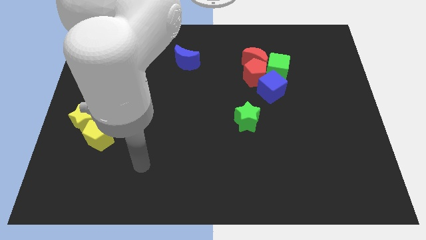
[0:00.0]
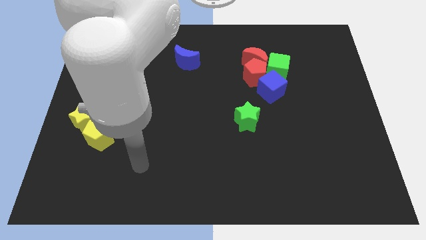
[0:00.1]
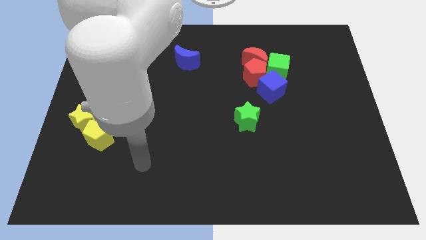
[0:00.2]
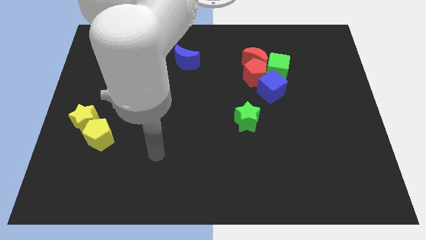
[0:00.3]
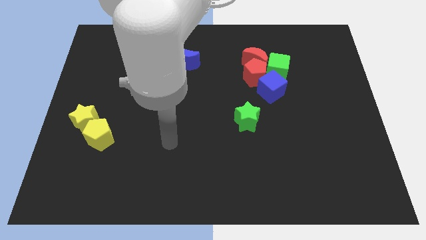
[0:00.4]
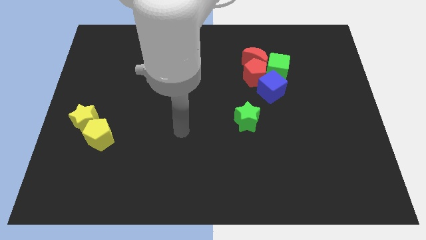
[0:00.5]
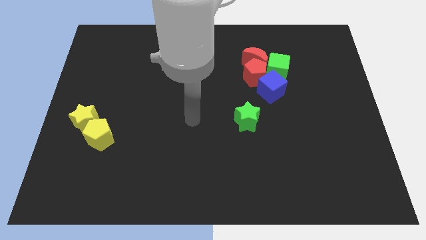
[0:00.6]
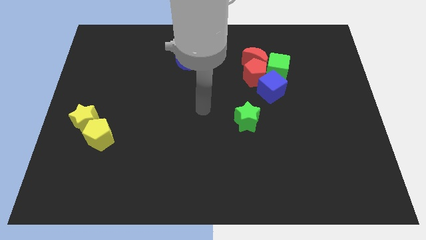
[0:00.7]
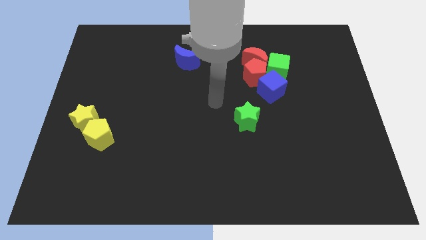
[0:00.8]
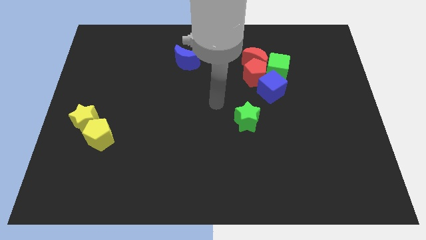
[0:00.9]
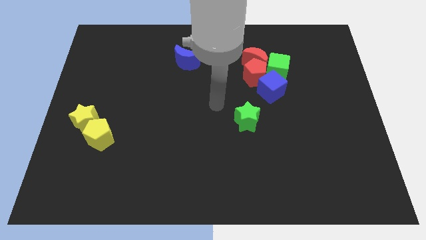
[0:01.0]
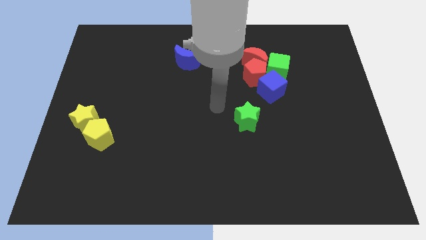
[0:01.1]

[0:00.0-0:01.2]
point your arm at the center of the board

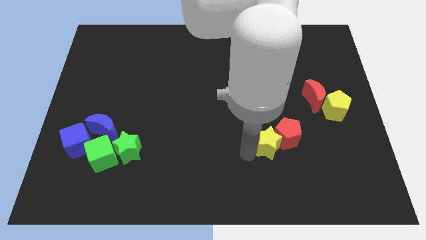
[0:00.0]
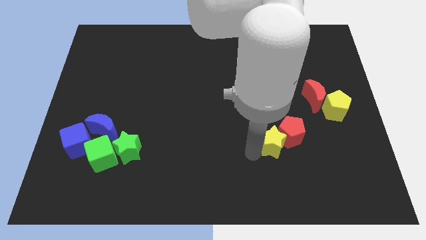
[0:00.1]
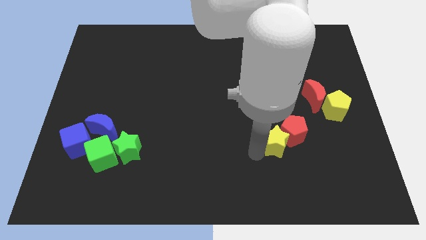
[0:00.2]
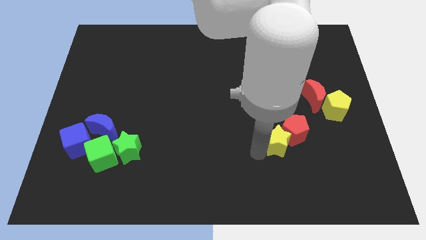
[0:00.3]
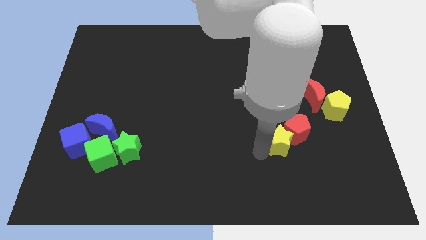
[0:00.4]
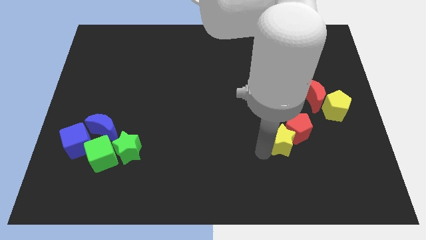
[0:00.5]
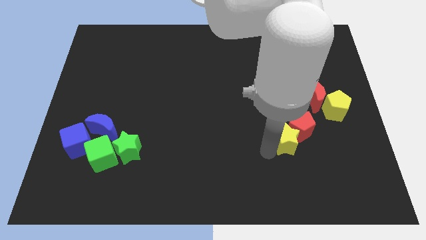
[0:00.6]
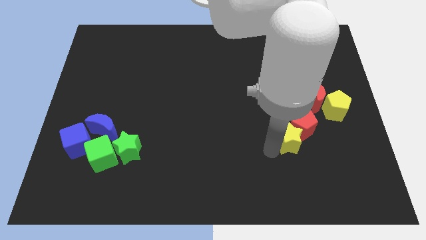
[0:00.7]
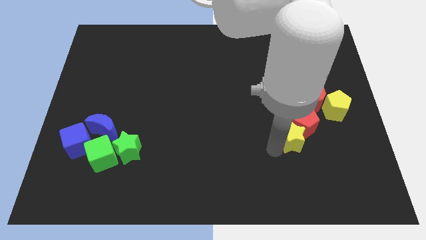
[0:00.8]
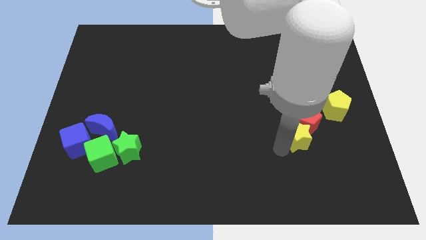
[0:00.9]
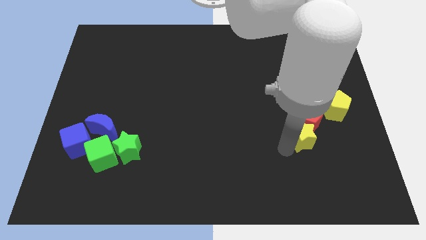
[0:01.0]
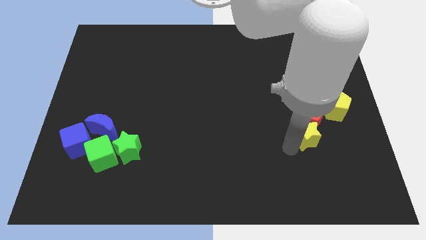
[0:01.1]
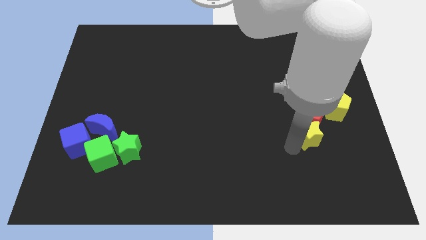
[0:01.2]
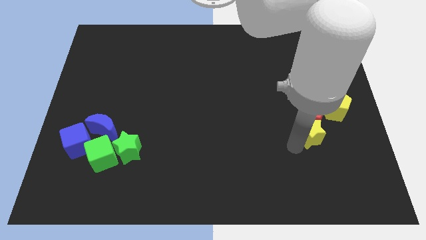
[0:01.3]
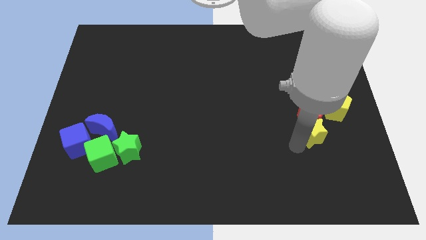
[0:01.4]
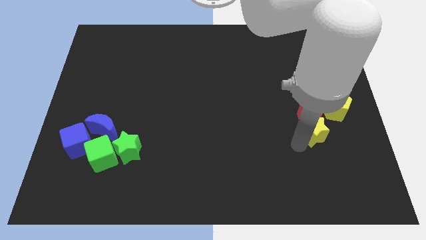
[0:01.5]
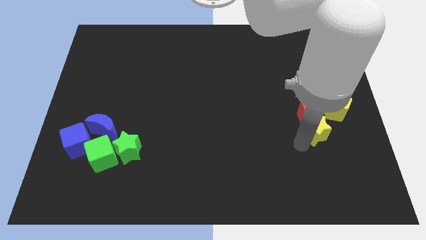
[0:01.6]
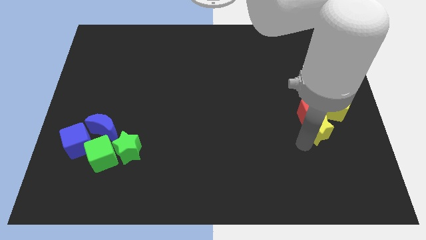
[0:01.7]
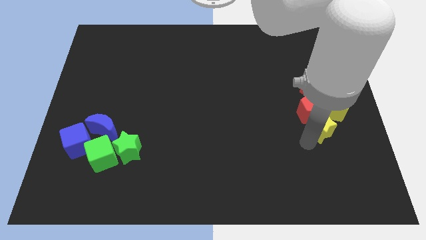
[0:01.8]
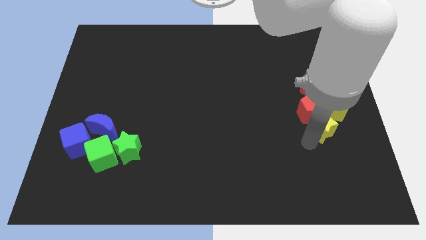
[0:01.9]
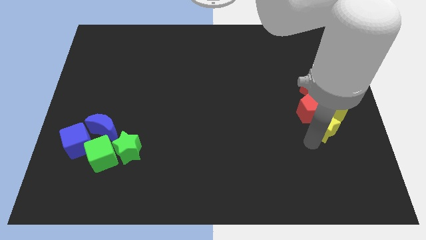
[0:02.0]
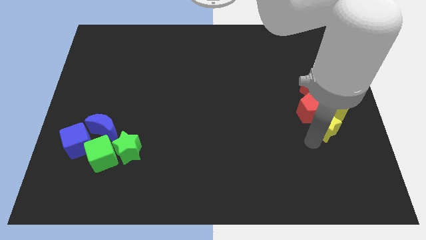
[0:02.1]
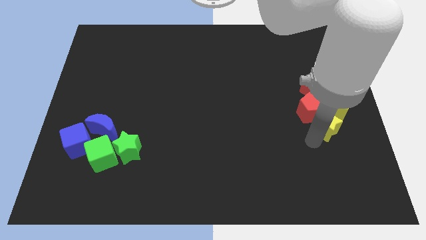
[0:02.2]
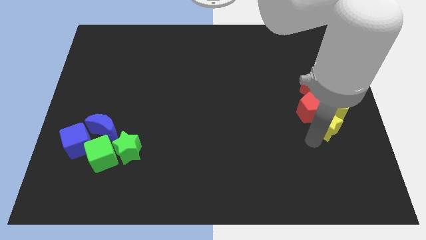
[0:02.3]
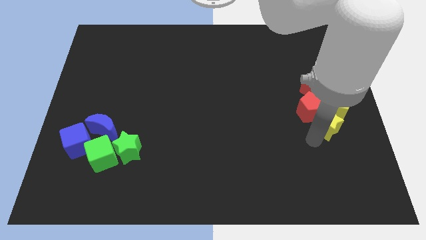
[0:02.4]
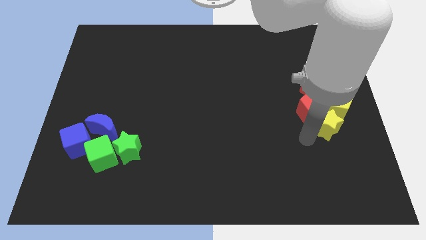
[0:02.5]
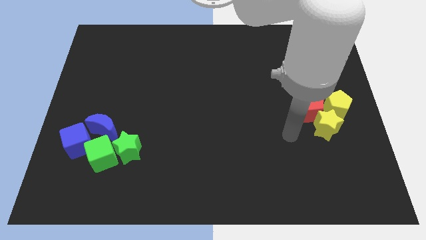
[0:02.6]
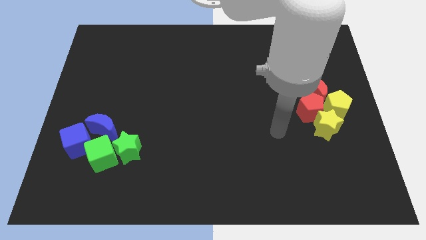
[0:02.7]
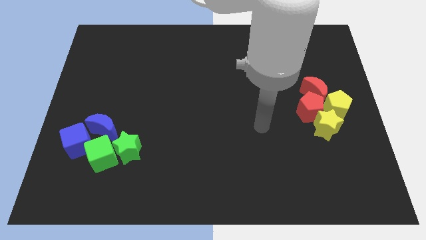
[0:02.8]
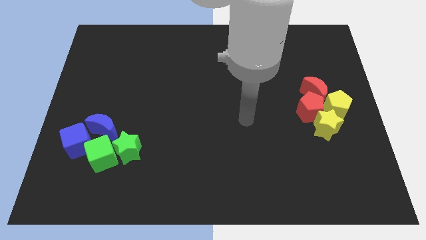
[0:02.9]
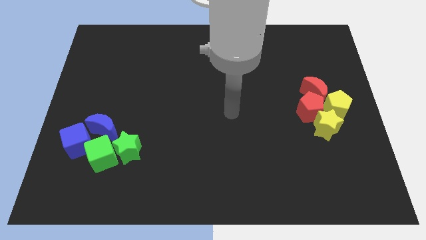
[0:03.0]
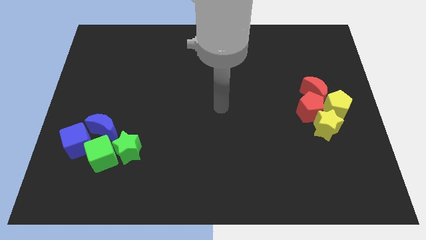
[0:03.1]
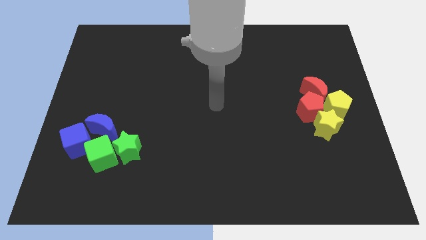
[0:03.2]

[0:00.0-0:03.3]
move the arm towards center

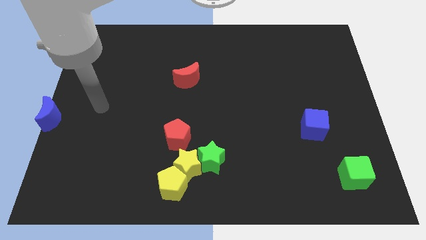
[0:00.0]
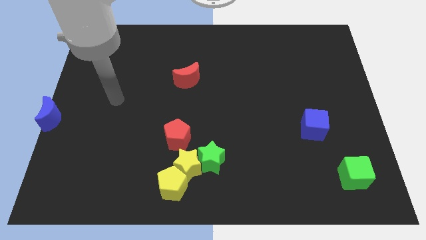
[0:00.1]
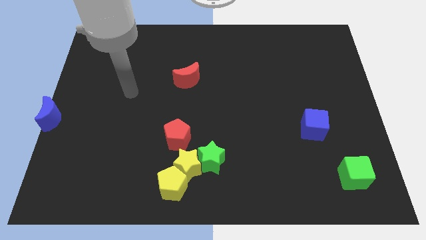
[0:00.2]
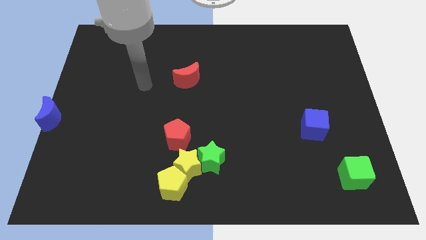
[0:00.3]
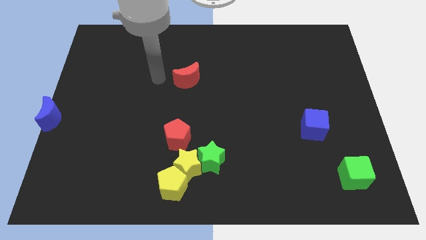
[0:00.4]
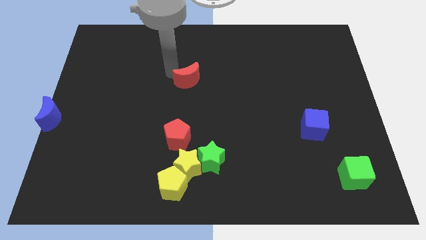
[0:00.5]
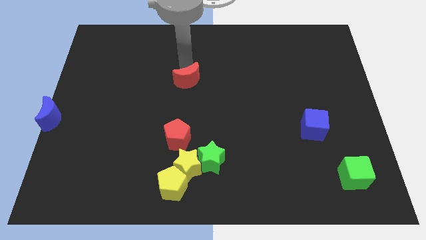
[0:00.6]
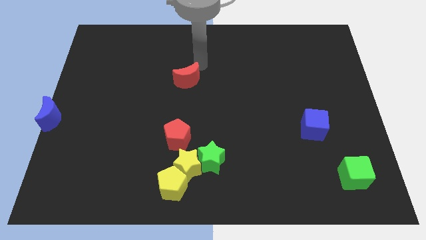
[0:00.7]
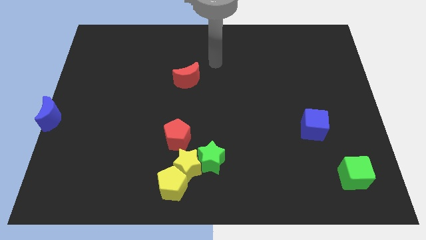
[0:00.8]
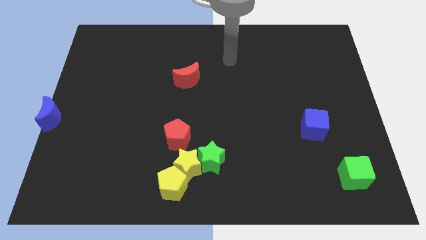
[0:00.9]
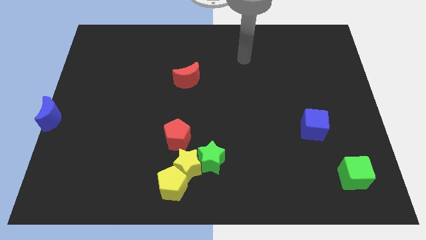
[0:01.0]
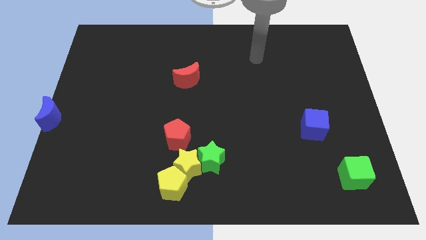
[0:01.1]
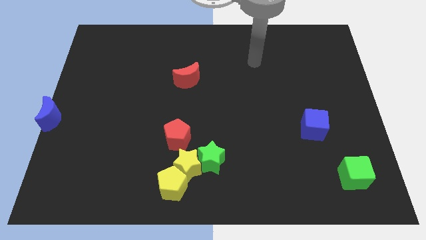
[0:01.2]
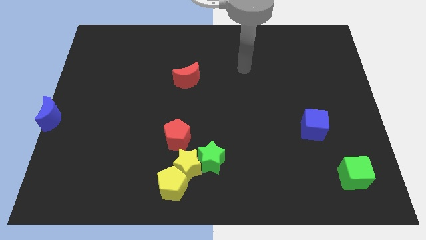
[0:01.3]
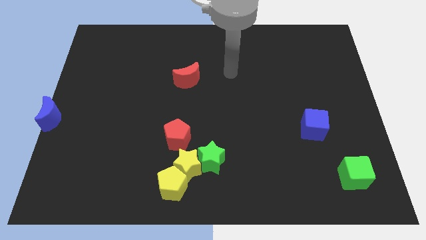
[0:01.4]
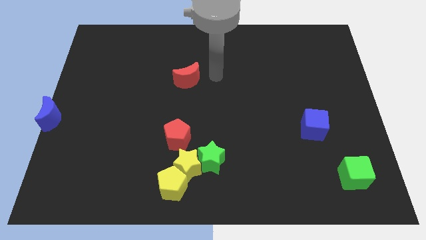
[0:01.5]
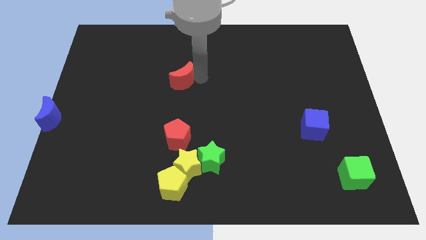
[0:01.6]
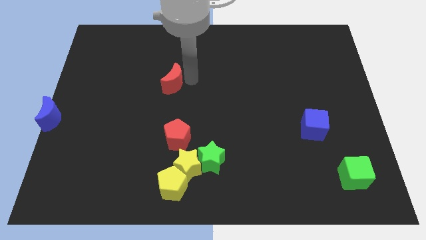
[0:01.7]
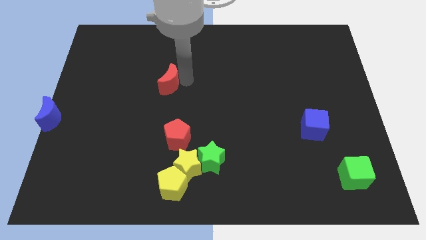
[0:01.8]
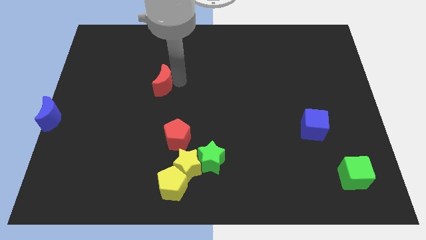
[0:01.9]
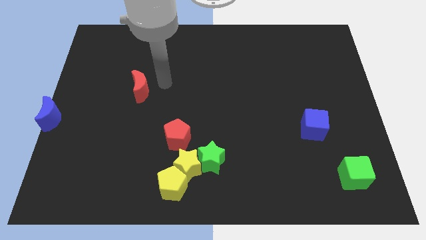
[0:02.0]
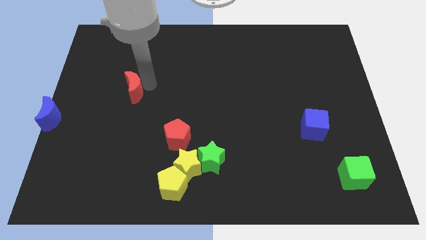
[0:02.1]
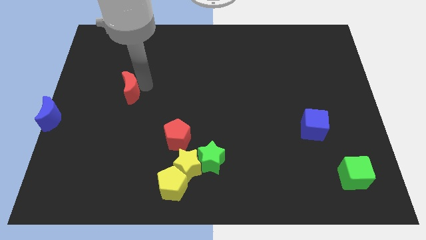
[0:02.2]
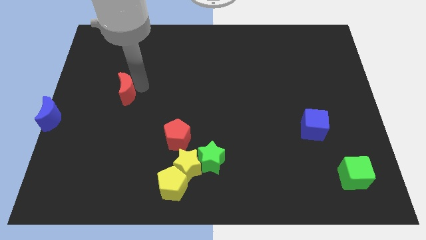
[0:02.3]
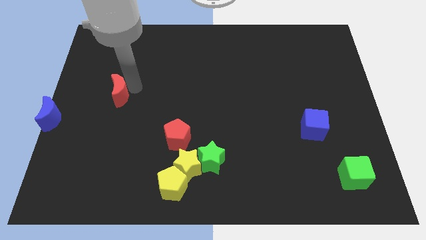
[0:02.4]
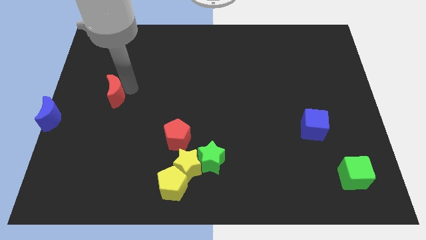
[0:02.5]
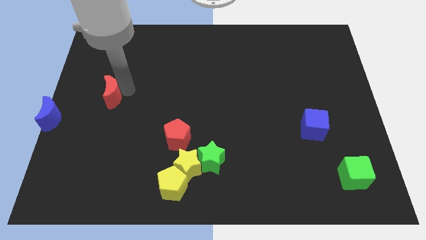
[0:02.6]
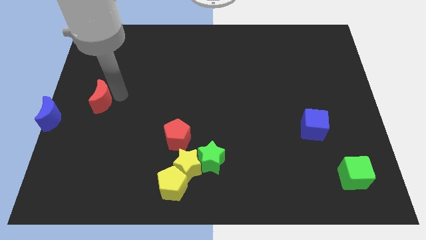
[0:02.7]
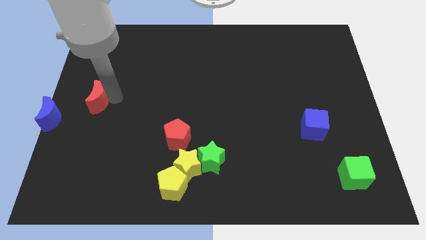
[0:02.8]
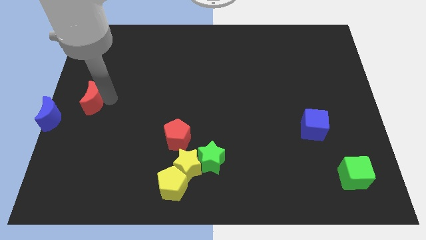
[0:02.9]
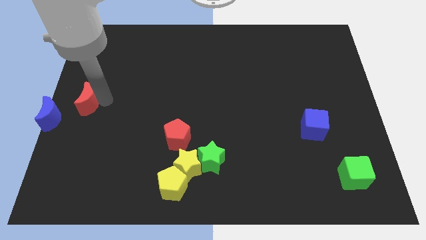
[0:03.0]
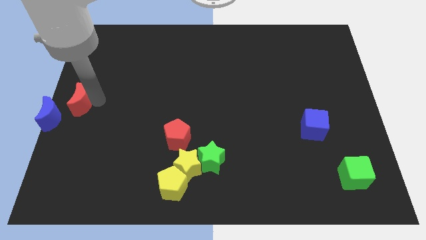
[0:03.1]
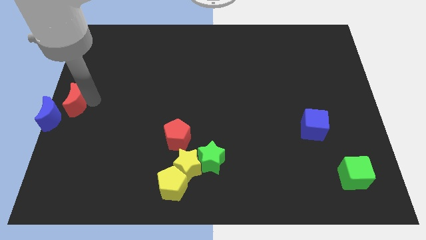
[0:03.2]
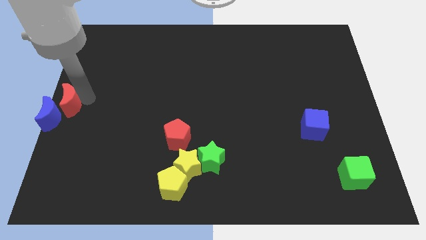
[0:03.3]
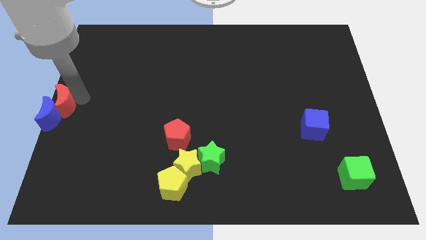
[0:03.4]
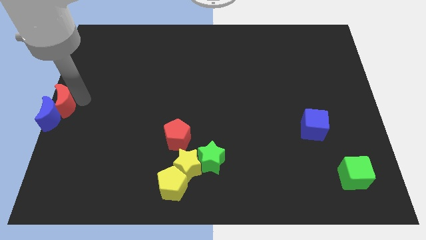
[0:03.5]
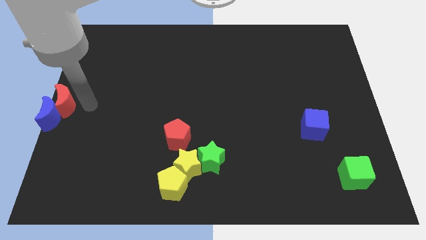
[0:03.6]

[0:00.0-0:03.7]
place red moon into the blue moon

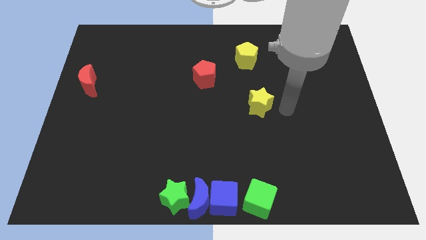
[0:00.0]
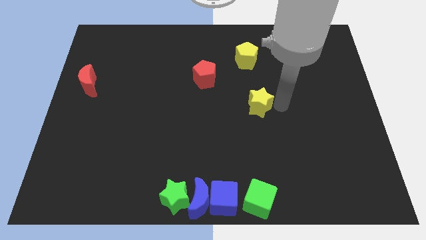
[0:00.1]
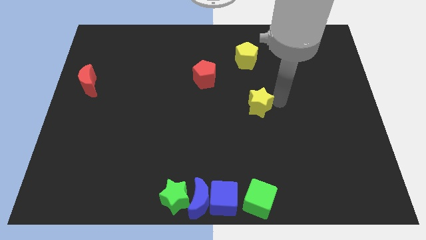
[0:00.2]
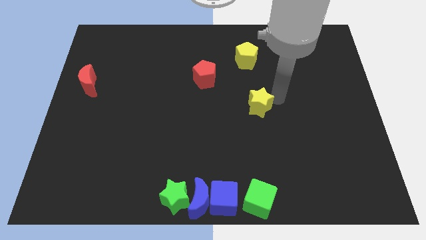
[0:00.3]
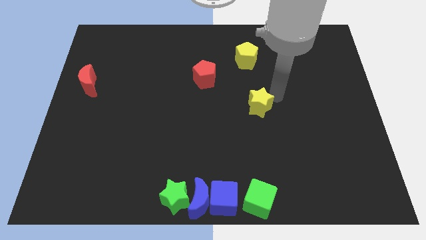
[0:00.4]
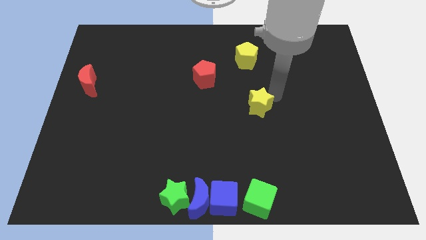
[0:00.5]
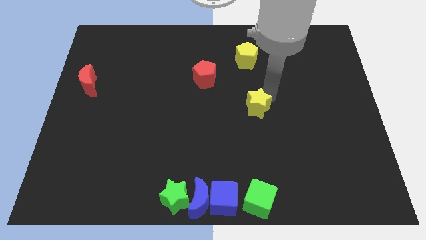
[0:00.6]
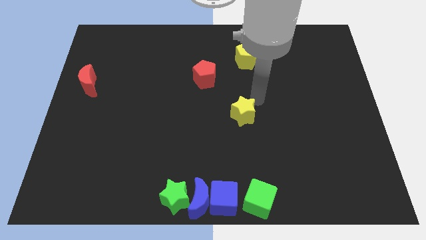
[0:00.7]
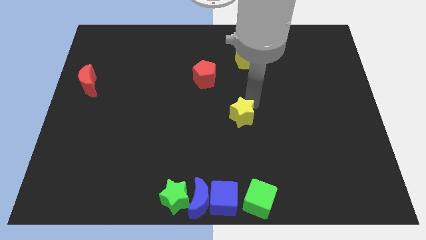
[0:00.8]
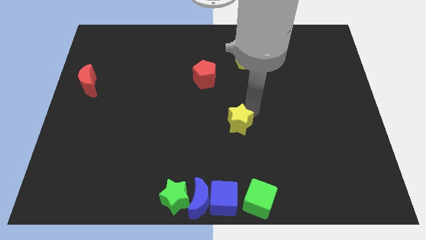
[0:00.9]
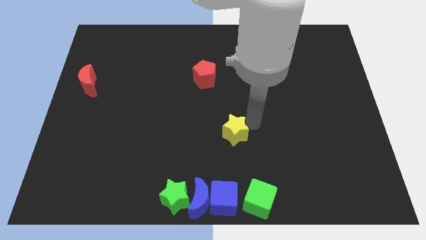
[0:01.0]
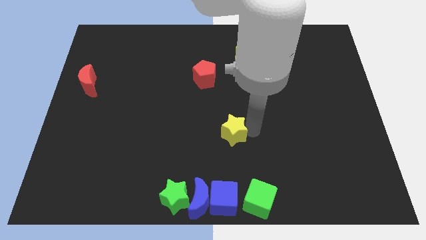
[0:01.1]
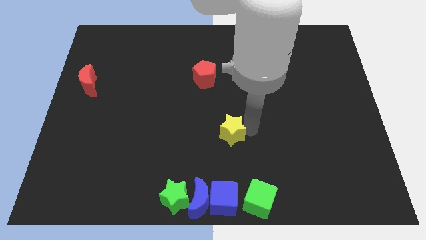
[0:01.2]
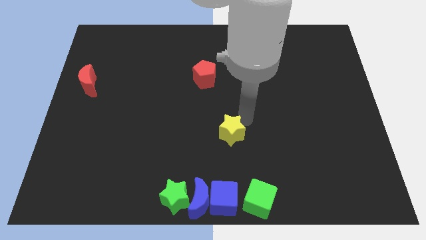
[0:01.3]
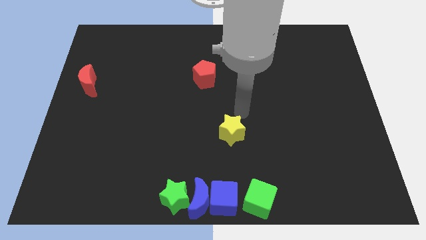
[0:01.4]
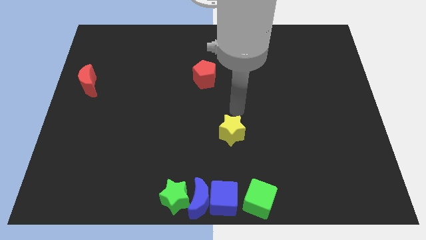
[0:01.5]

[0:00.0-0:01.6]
move the yellow star vertically to the top of the blue cube
